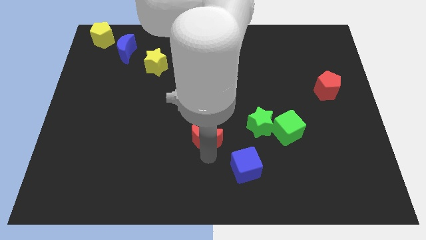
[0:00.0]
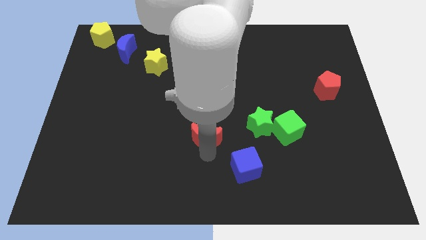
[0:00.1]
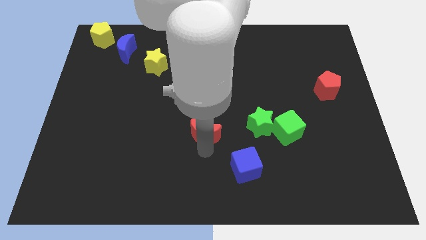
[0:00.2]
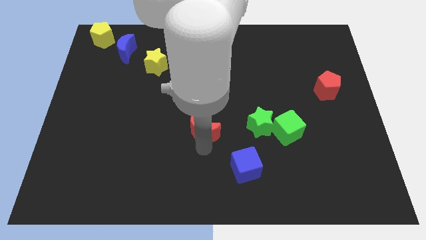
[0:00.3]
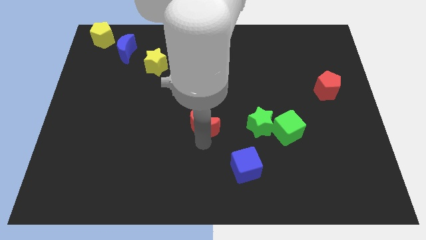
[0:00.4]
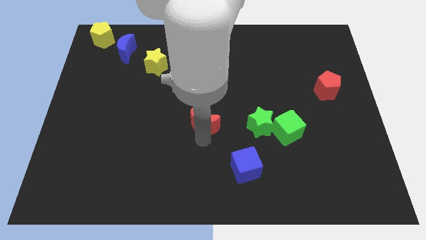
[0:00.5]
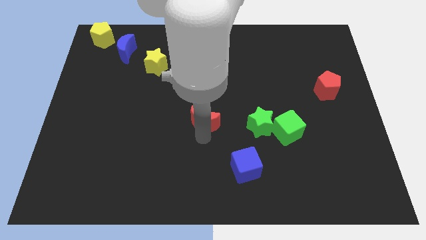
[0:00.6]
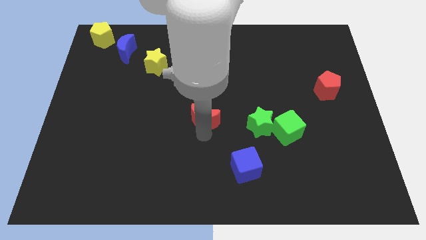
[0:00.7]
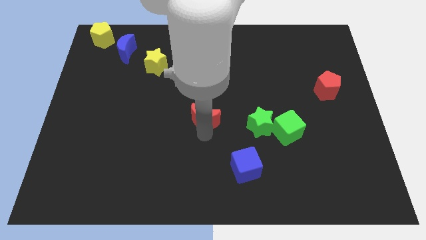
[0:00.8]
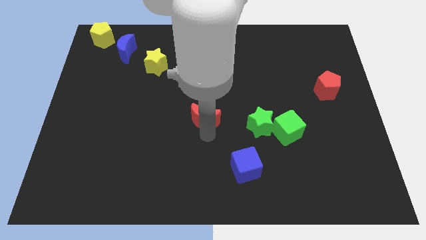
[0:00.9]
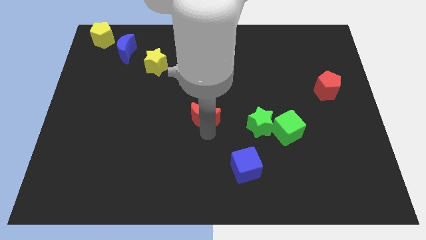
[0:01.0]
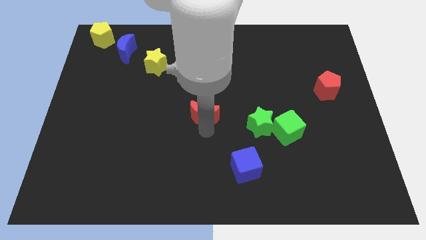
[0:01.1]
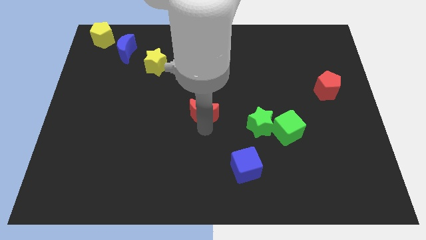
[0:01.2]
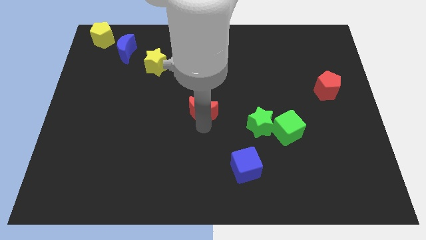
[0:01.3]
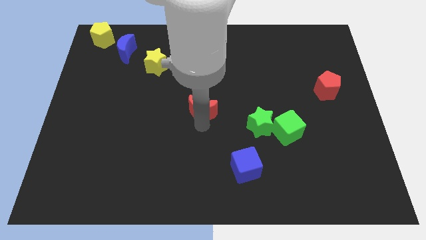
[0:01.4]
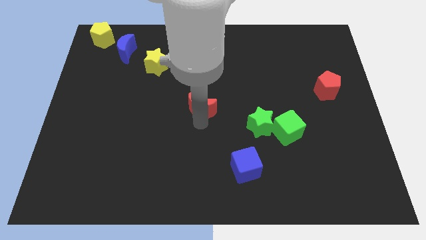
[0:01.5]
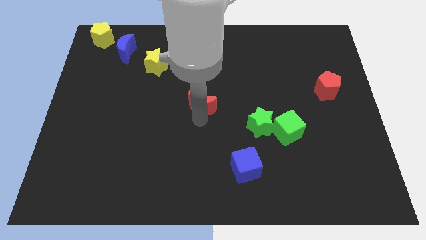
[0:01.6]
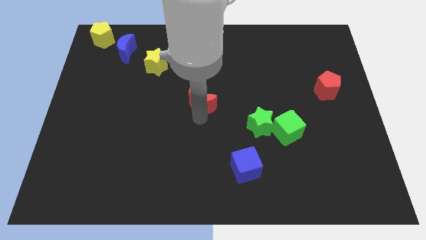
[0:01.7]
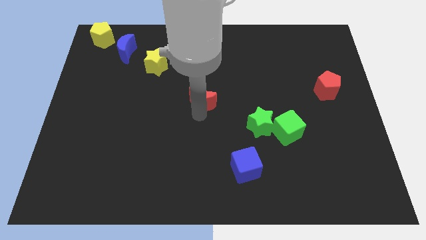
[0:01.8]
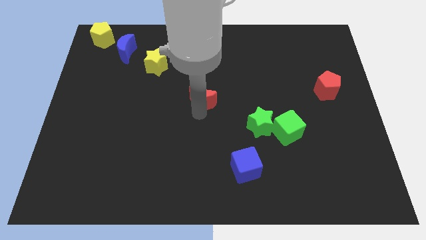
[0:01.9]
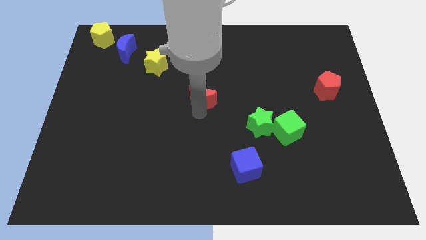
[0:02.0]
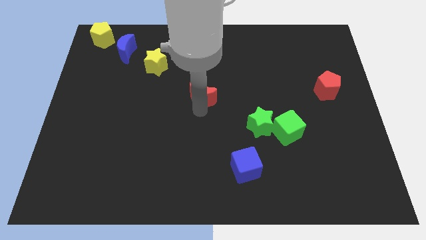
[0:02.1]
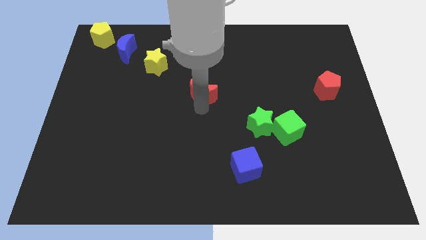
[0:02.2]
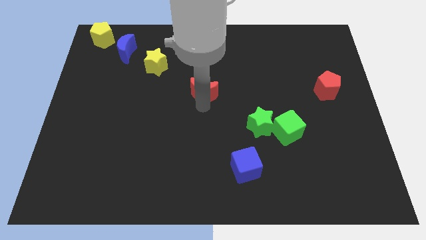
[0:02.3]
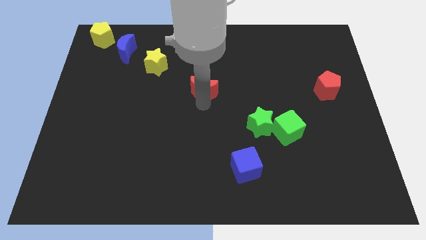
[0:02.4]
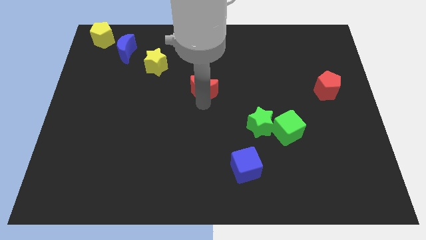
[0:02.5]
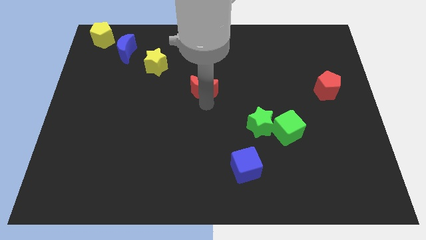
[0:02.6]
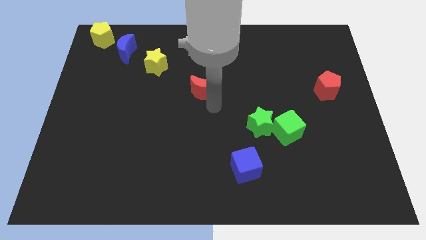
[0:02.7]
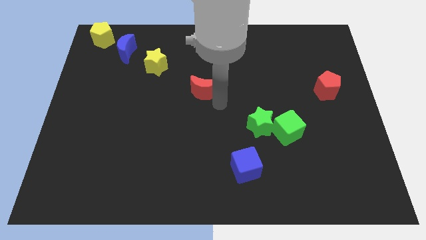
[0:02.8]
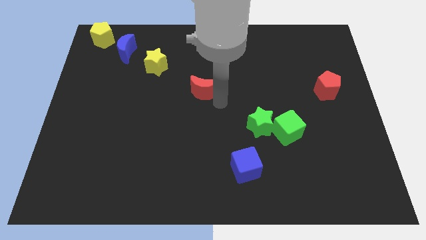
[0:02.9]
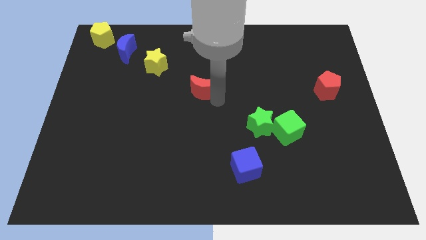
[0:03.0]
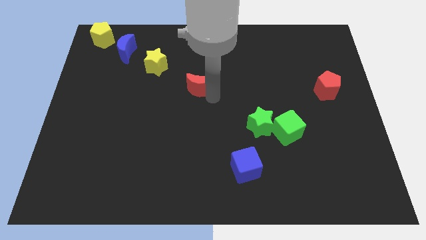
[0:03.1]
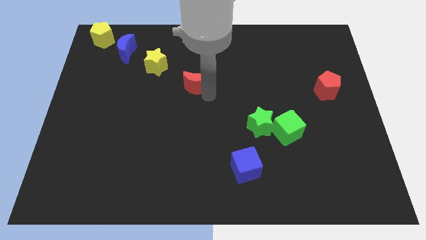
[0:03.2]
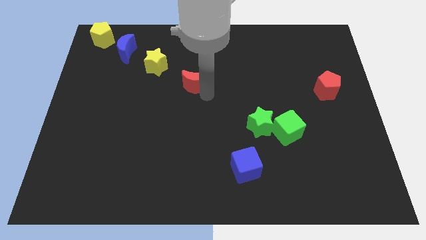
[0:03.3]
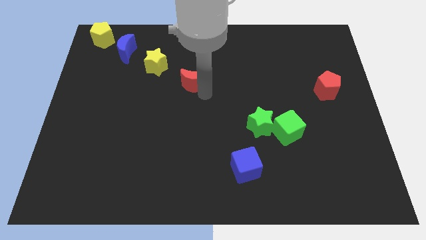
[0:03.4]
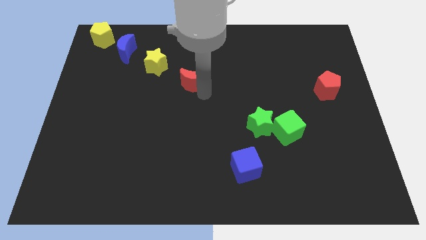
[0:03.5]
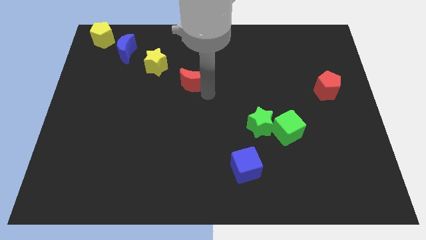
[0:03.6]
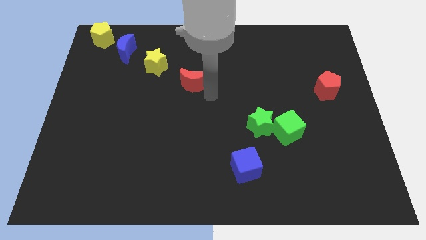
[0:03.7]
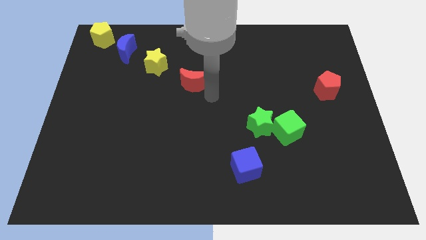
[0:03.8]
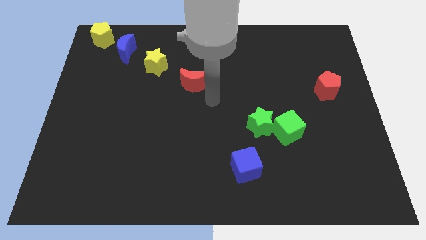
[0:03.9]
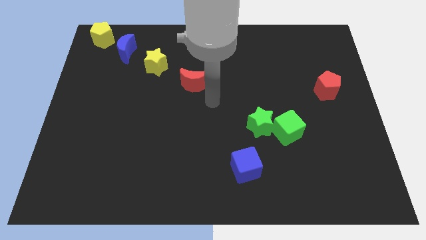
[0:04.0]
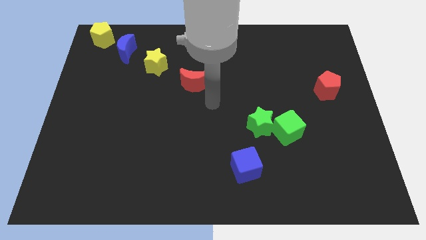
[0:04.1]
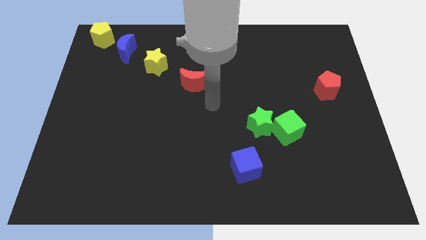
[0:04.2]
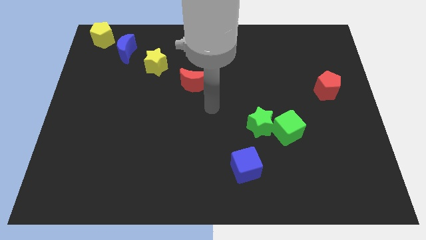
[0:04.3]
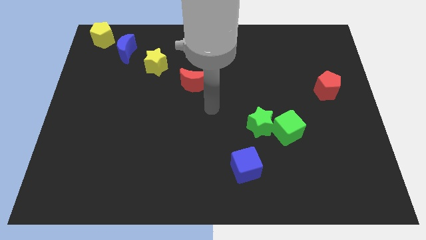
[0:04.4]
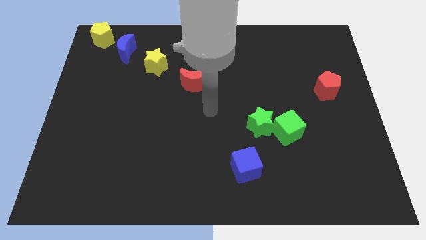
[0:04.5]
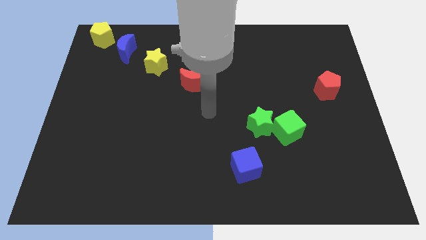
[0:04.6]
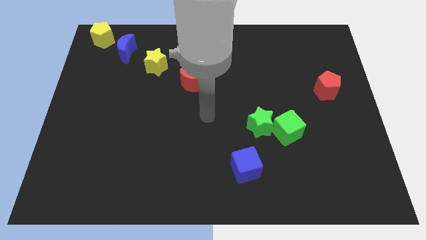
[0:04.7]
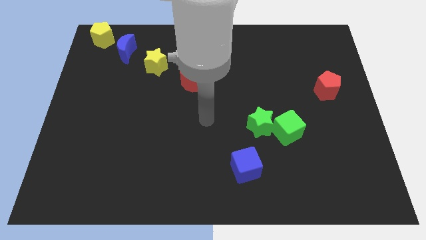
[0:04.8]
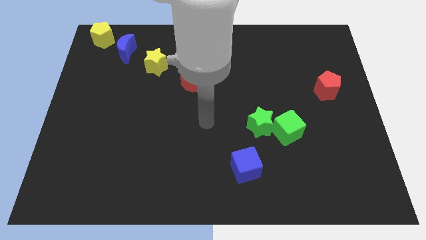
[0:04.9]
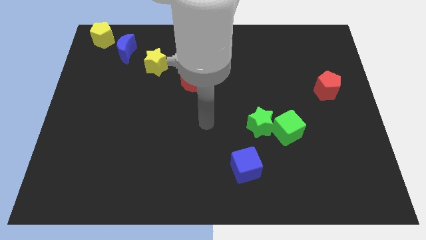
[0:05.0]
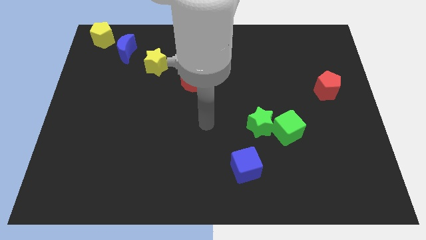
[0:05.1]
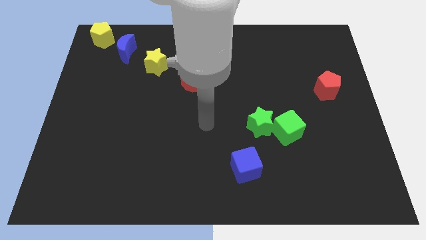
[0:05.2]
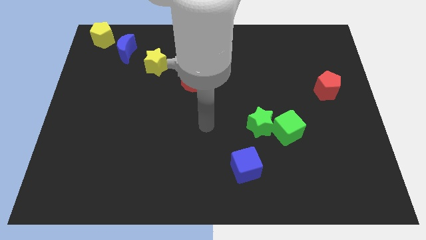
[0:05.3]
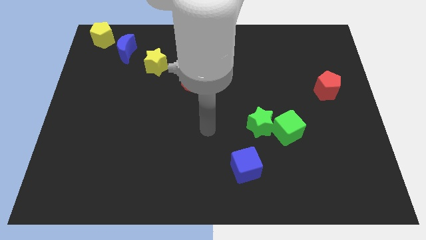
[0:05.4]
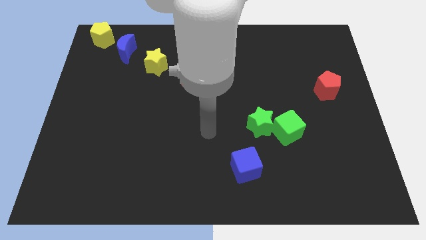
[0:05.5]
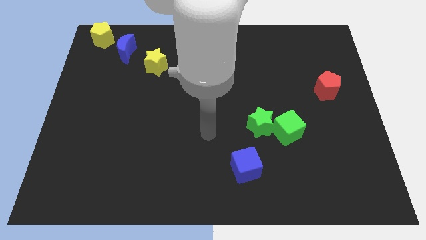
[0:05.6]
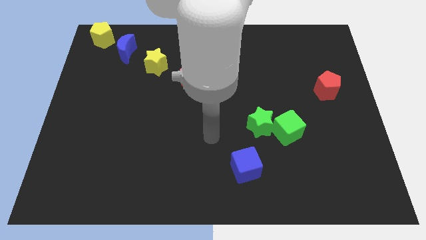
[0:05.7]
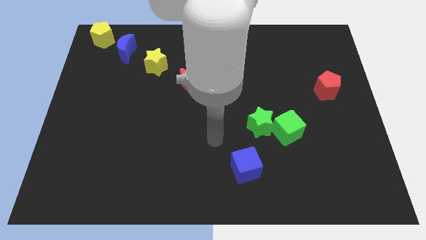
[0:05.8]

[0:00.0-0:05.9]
move the red moon diagonal to the yellow star

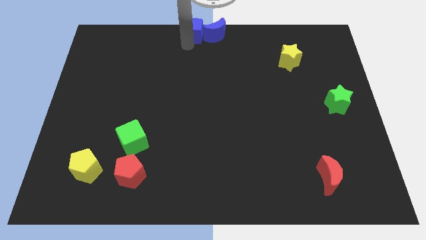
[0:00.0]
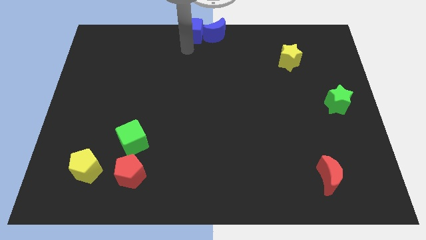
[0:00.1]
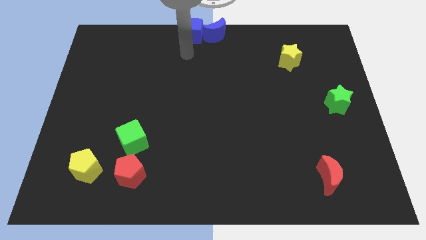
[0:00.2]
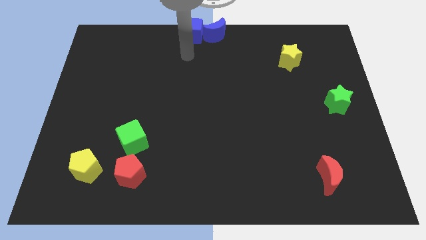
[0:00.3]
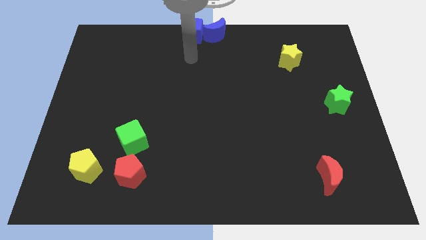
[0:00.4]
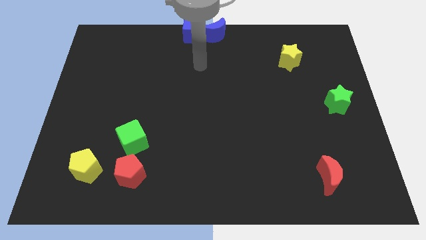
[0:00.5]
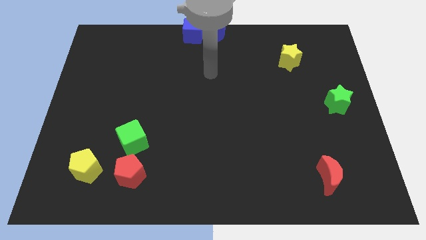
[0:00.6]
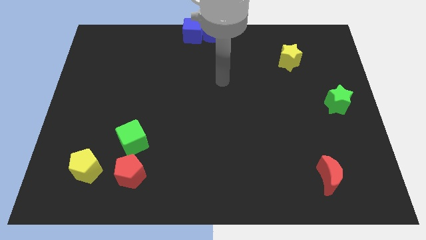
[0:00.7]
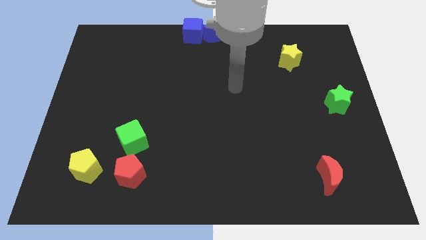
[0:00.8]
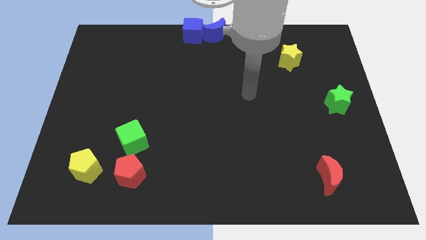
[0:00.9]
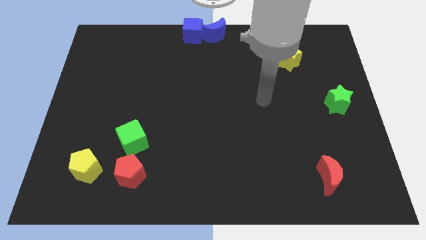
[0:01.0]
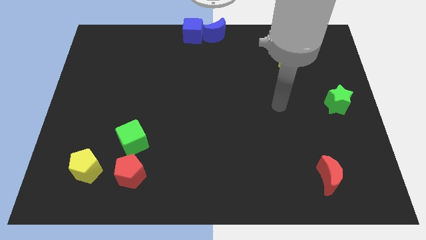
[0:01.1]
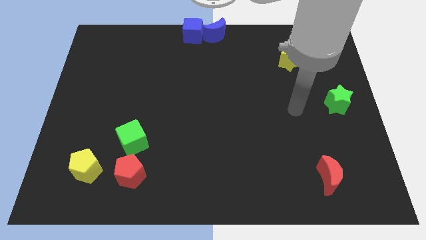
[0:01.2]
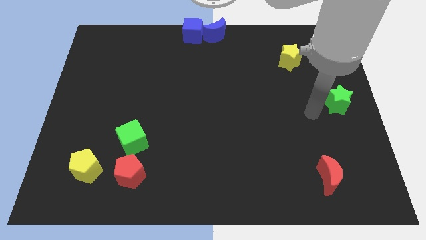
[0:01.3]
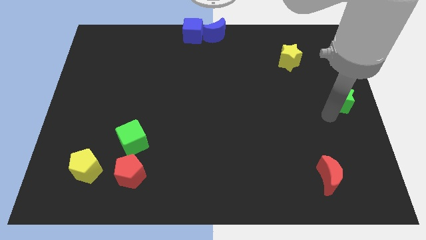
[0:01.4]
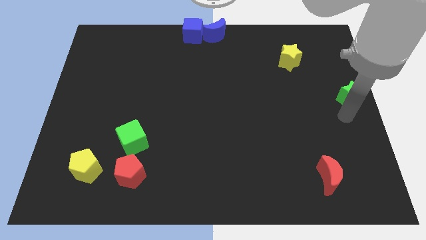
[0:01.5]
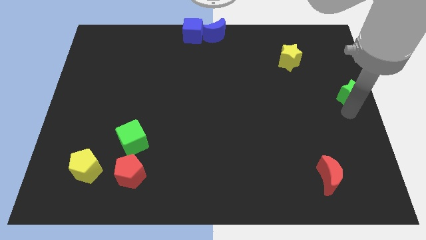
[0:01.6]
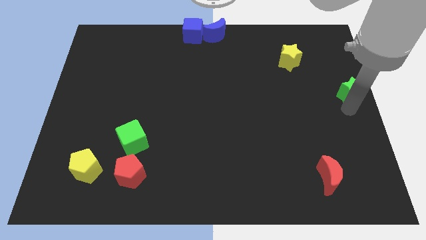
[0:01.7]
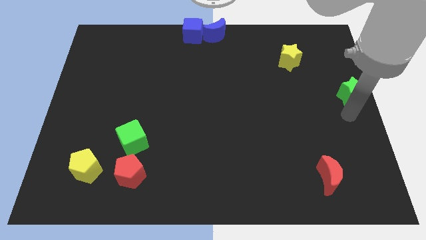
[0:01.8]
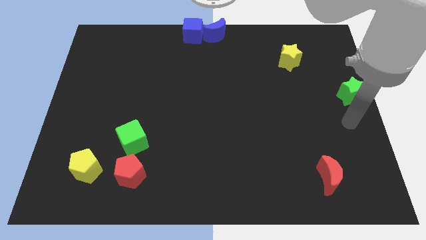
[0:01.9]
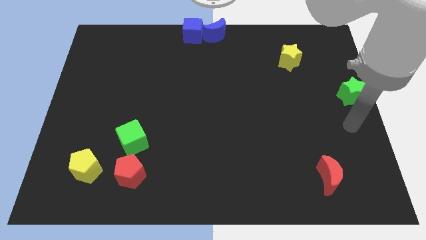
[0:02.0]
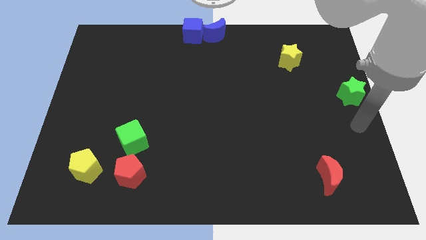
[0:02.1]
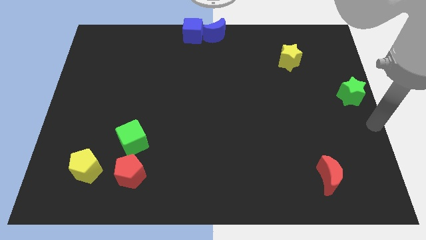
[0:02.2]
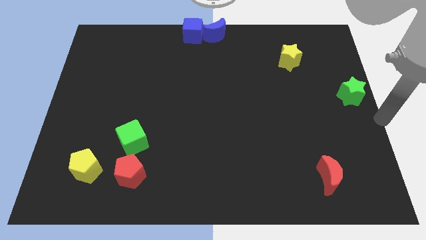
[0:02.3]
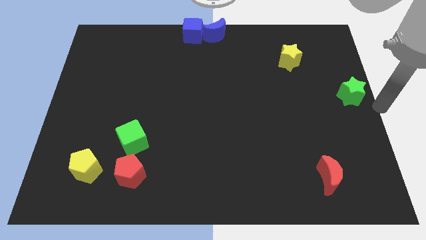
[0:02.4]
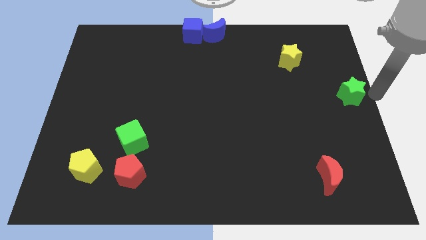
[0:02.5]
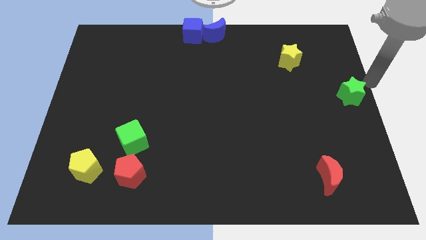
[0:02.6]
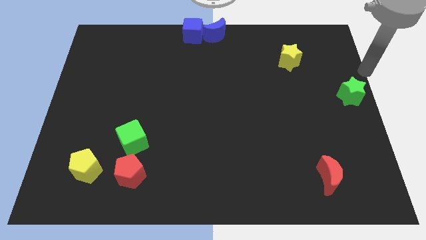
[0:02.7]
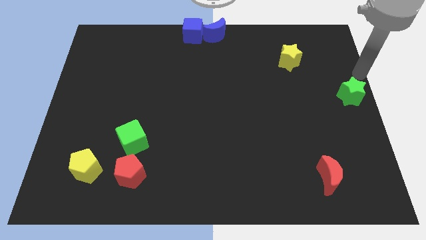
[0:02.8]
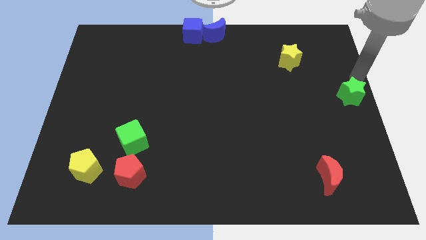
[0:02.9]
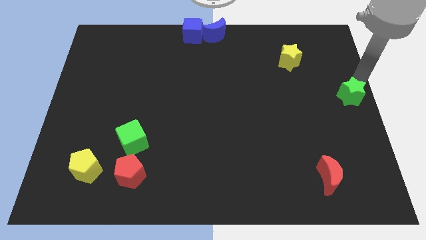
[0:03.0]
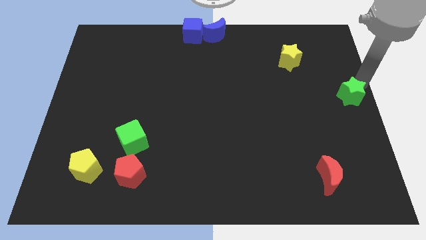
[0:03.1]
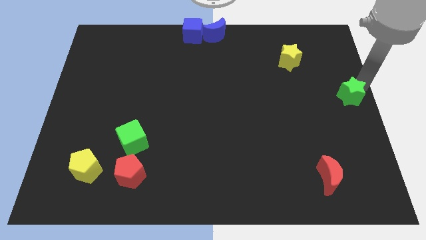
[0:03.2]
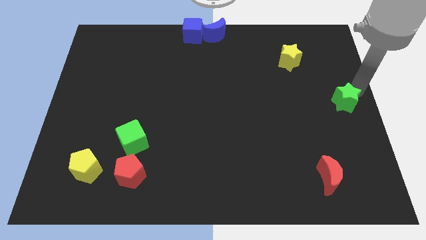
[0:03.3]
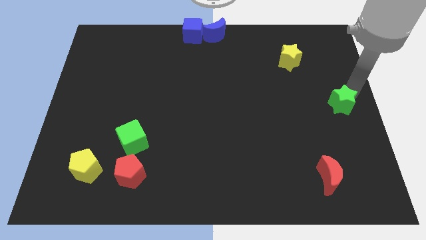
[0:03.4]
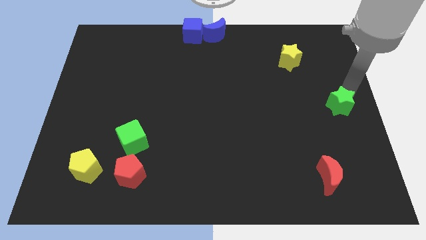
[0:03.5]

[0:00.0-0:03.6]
move your arm away from the blue cube
